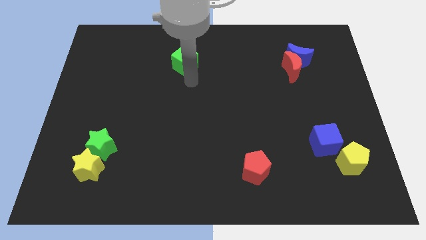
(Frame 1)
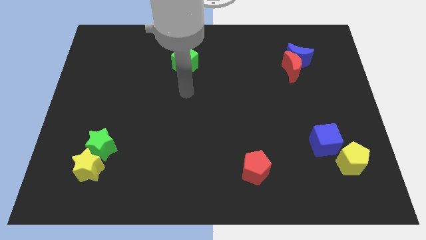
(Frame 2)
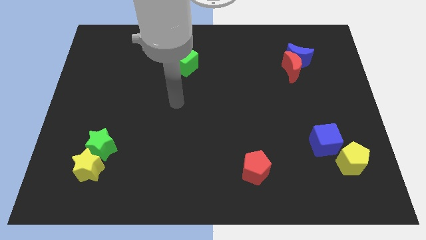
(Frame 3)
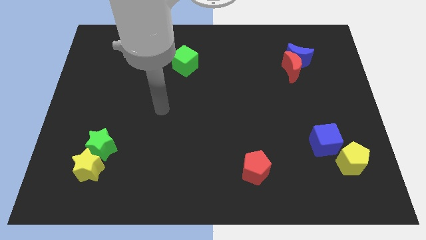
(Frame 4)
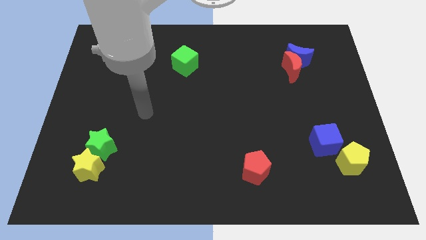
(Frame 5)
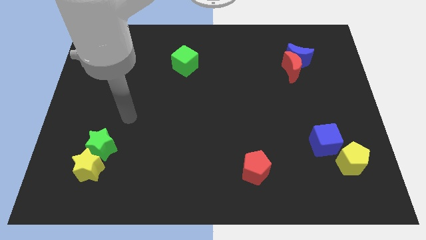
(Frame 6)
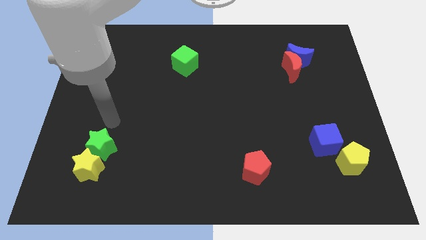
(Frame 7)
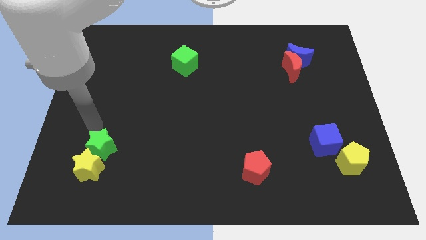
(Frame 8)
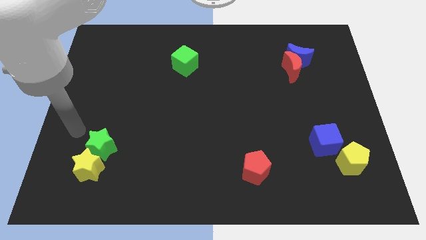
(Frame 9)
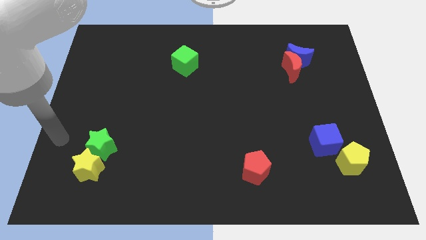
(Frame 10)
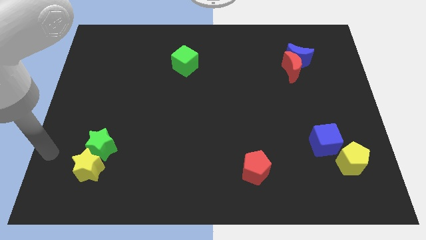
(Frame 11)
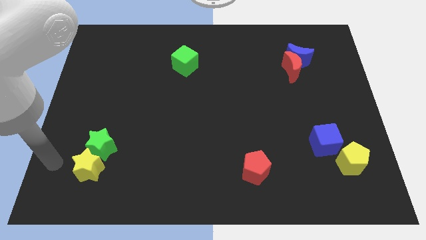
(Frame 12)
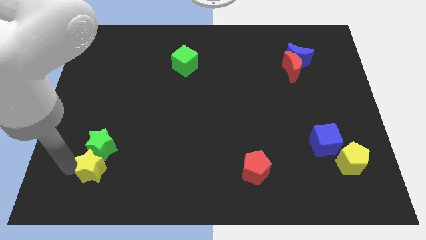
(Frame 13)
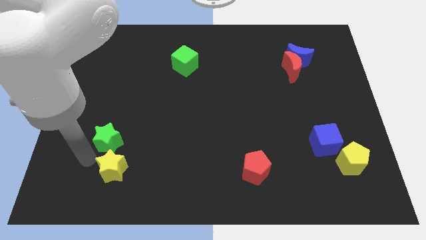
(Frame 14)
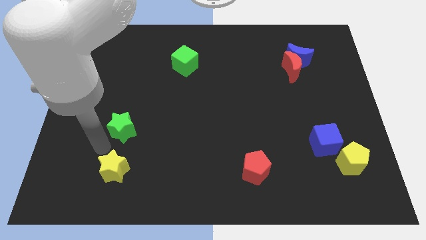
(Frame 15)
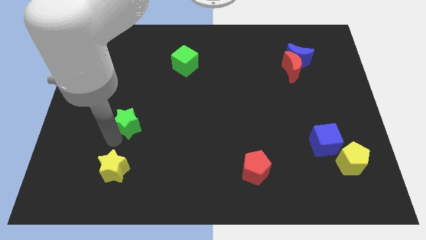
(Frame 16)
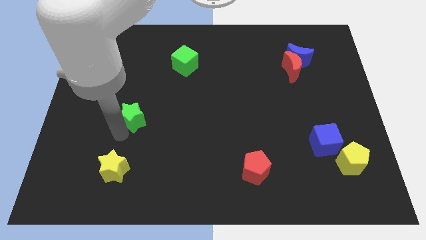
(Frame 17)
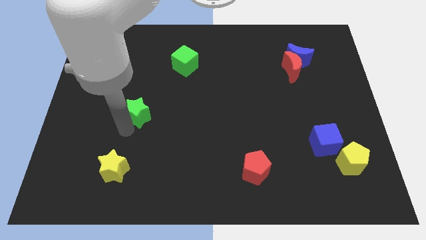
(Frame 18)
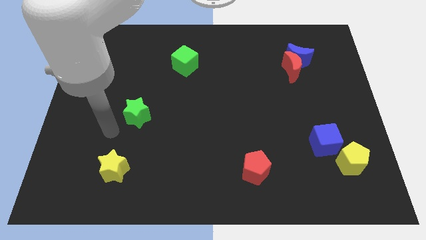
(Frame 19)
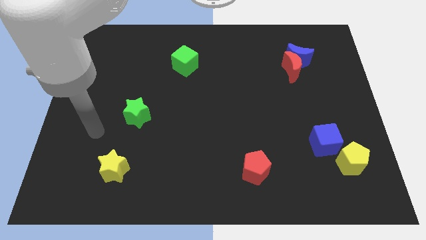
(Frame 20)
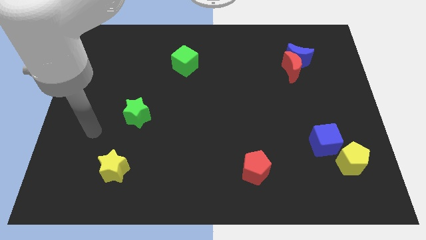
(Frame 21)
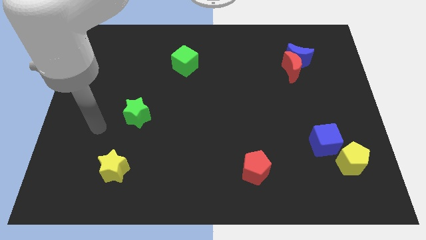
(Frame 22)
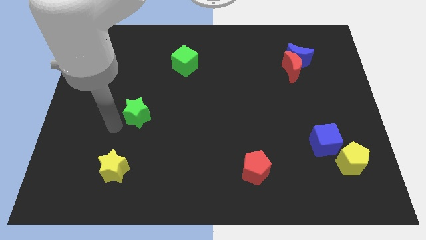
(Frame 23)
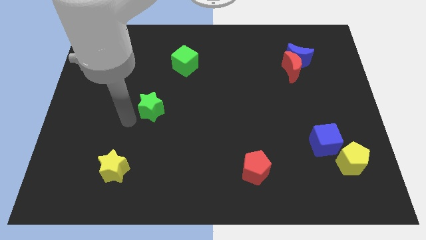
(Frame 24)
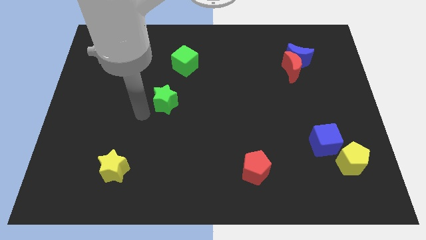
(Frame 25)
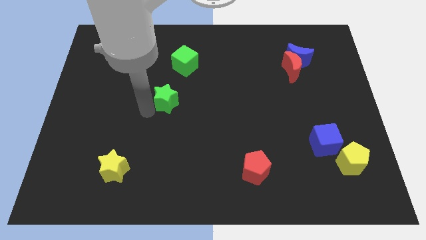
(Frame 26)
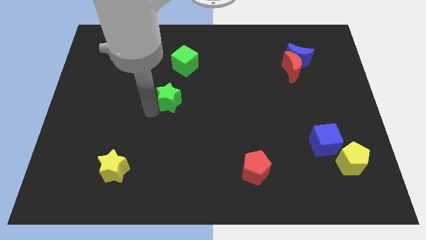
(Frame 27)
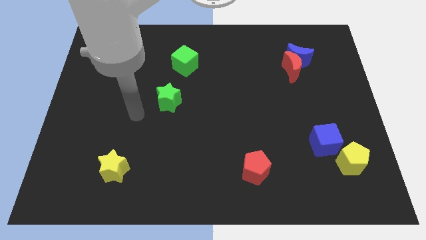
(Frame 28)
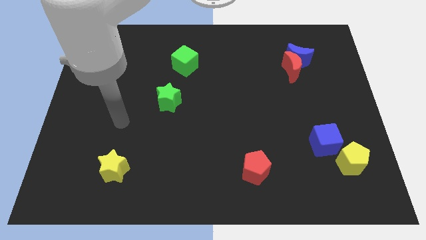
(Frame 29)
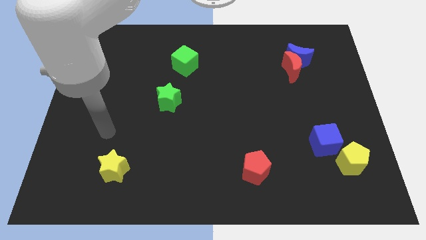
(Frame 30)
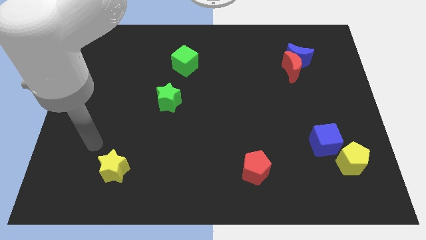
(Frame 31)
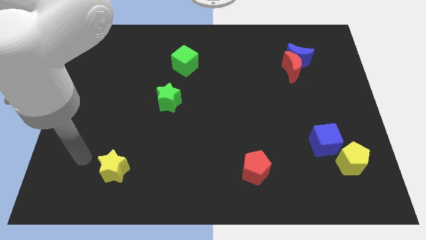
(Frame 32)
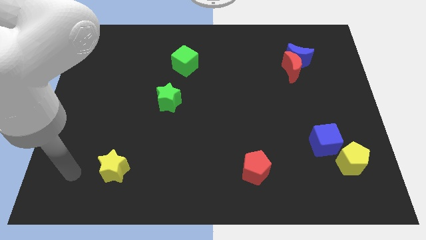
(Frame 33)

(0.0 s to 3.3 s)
apart green star and yellow star

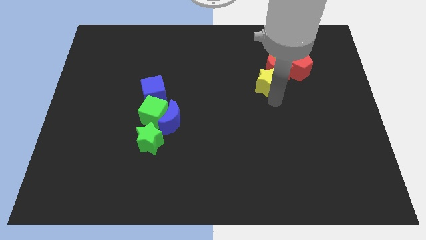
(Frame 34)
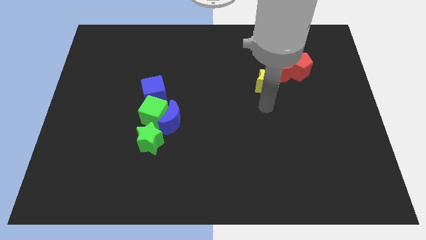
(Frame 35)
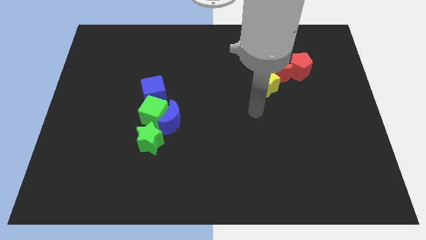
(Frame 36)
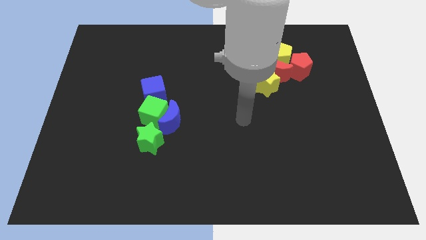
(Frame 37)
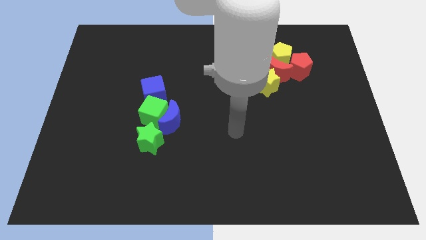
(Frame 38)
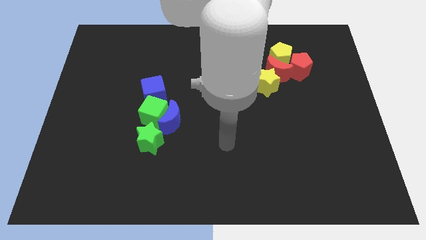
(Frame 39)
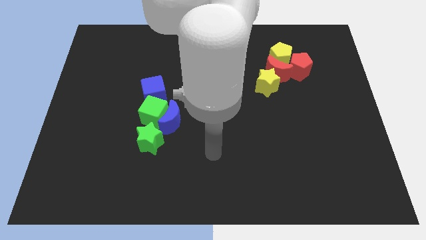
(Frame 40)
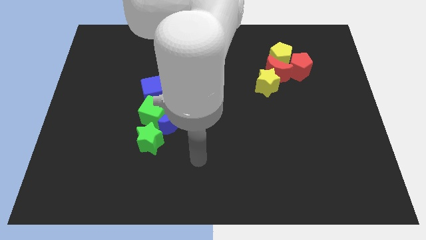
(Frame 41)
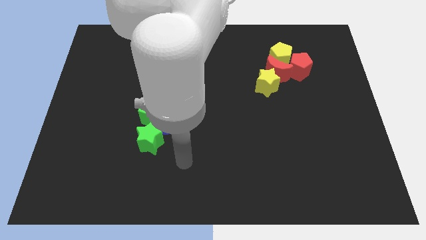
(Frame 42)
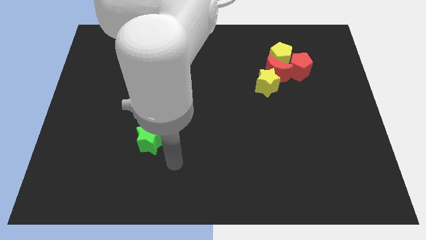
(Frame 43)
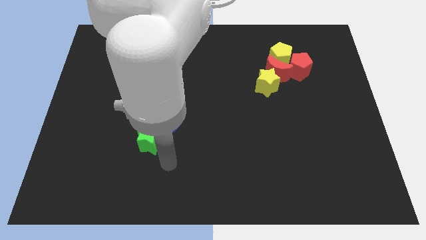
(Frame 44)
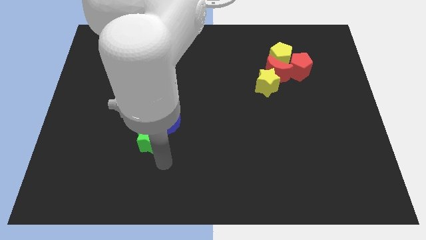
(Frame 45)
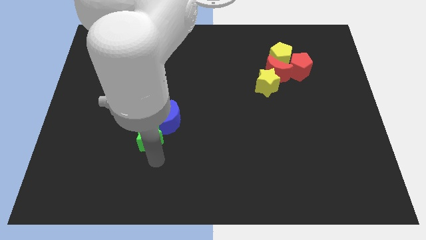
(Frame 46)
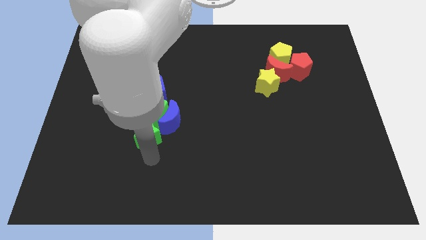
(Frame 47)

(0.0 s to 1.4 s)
move your arm towards the bottom of the green star

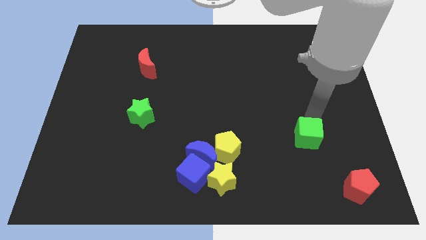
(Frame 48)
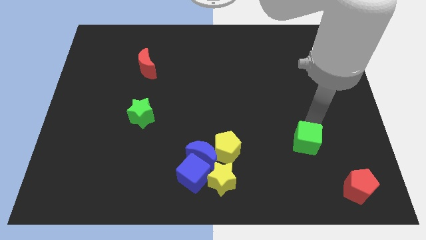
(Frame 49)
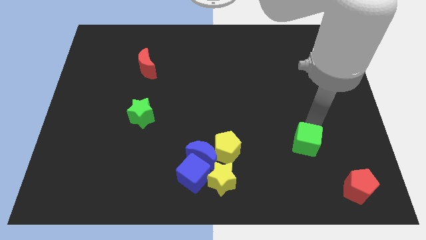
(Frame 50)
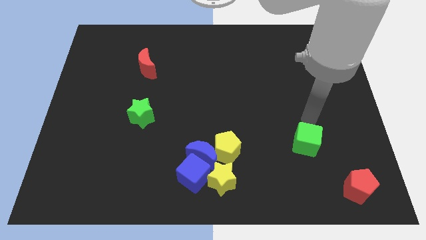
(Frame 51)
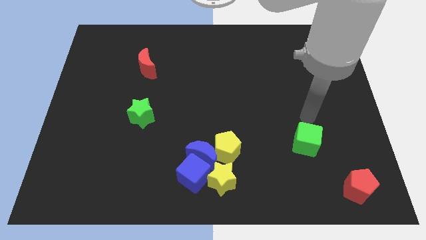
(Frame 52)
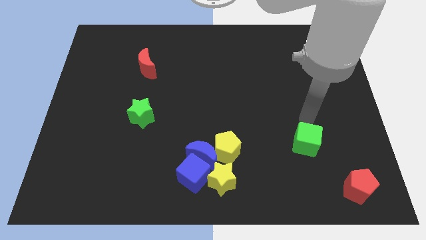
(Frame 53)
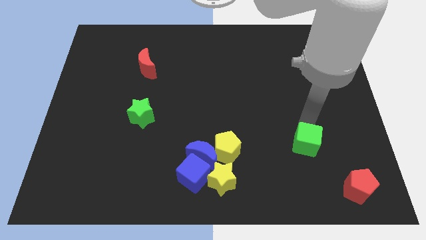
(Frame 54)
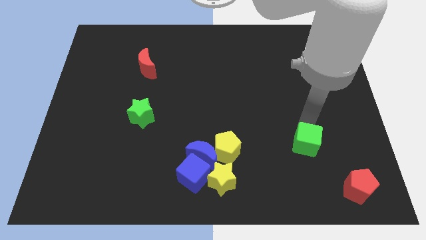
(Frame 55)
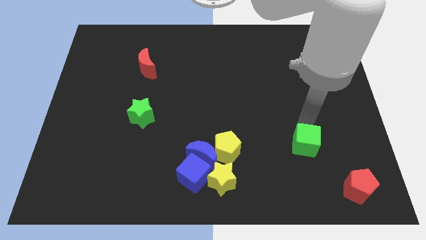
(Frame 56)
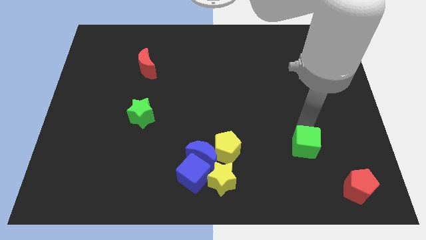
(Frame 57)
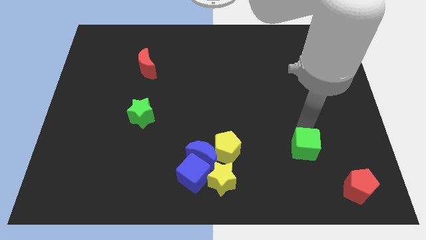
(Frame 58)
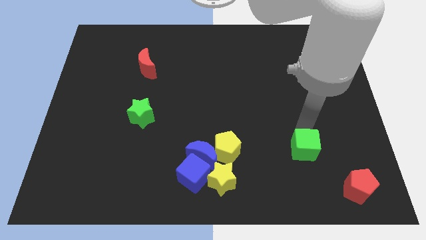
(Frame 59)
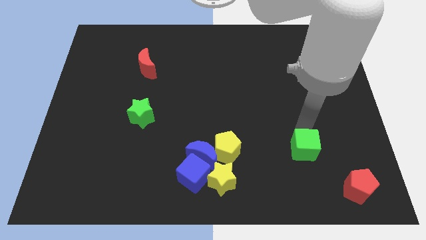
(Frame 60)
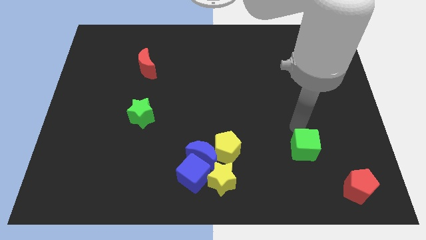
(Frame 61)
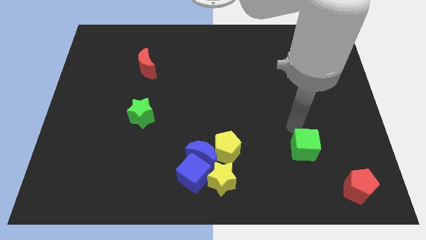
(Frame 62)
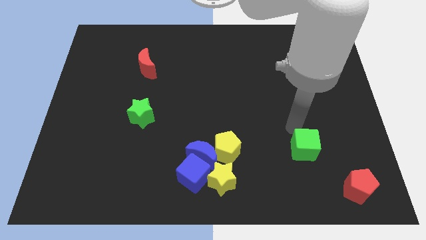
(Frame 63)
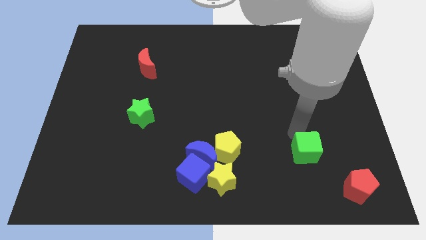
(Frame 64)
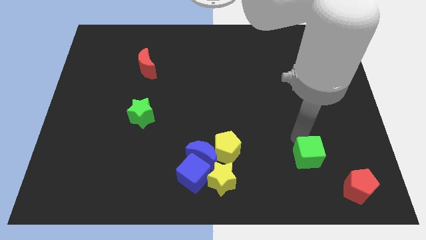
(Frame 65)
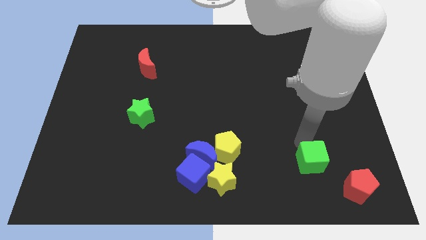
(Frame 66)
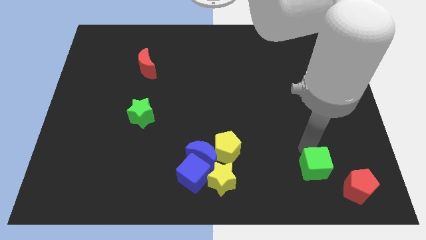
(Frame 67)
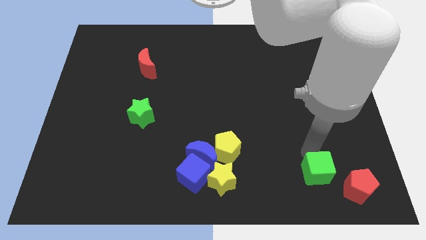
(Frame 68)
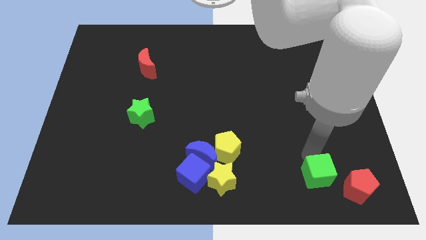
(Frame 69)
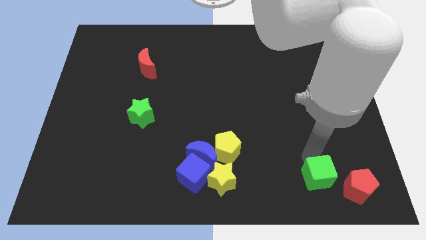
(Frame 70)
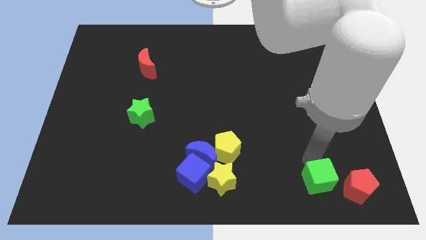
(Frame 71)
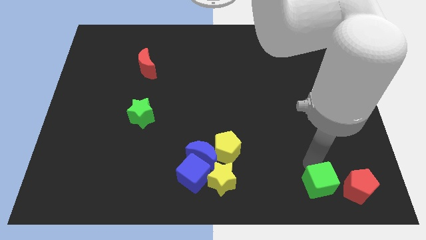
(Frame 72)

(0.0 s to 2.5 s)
push the green cube left to the red pentagon

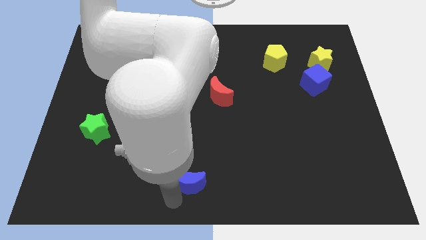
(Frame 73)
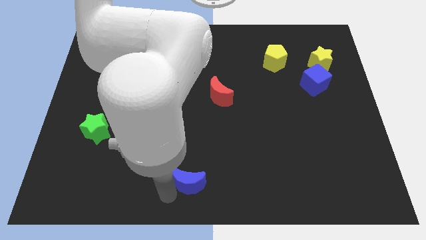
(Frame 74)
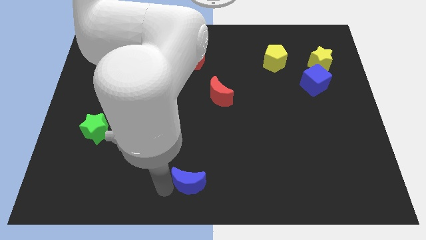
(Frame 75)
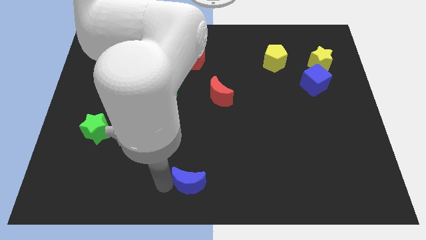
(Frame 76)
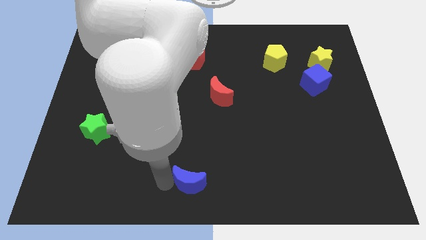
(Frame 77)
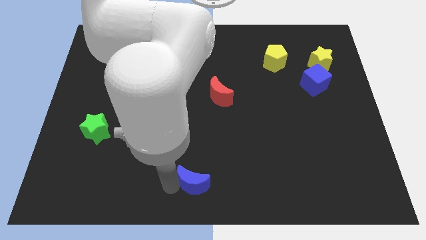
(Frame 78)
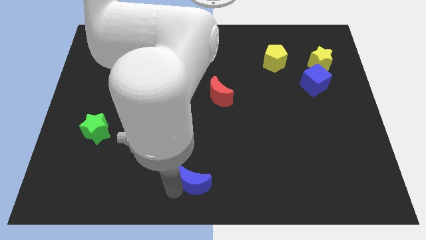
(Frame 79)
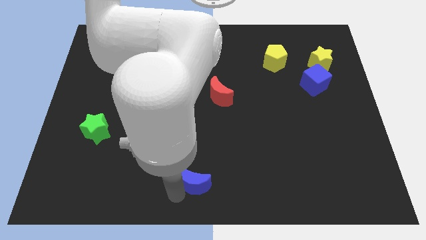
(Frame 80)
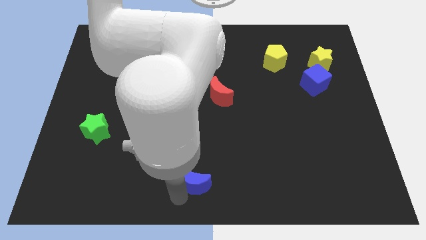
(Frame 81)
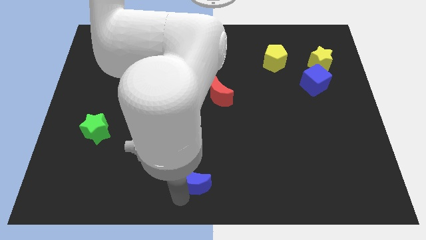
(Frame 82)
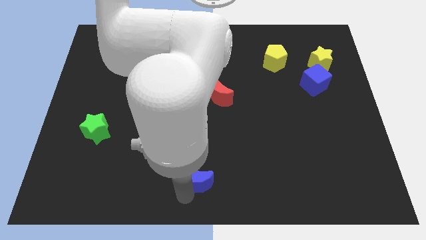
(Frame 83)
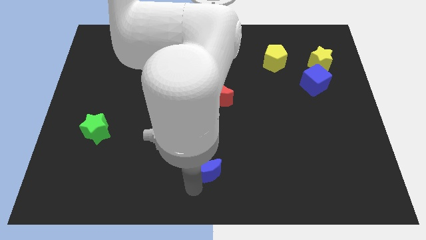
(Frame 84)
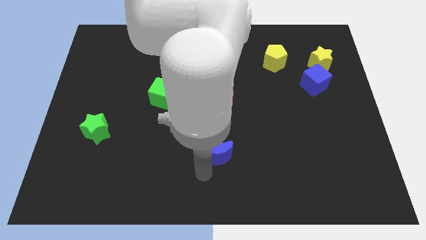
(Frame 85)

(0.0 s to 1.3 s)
drag the blue crescent upwards

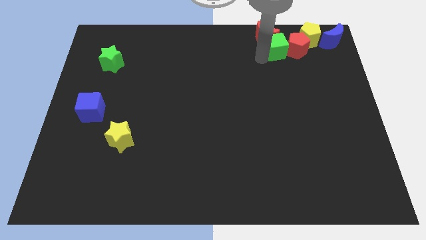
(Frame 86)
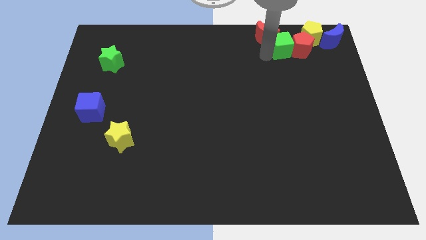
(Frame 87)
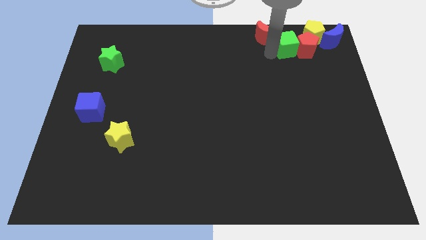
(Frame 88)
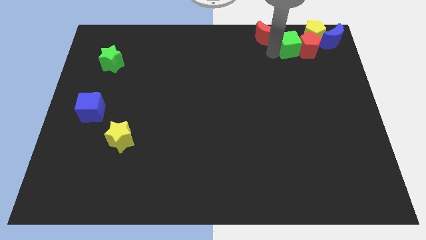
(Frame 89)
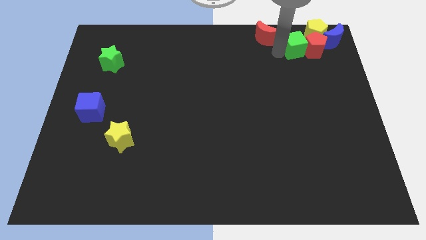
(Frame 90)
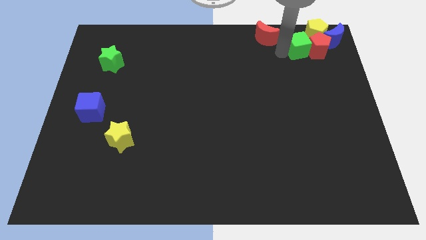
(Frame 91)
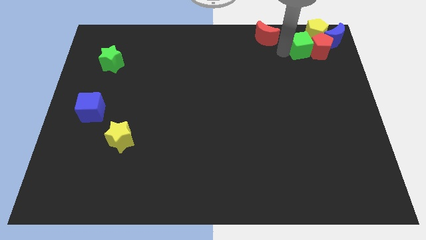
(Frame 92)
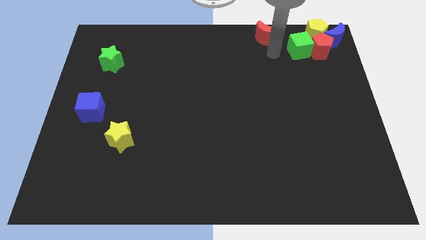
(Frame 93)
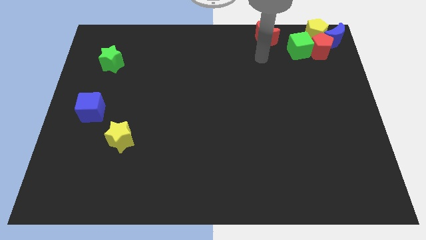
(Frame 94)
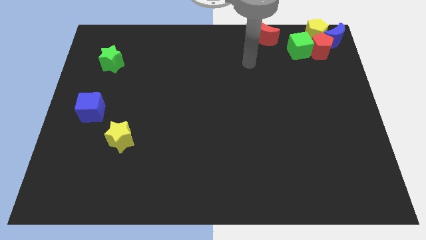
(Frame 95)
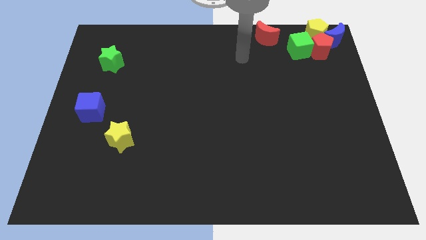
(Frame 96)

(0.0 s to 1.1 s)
push the green cube into the red pentagon towards the right
